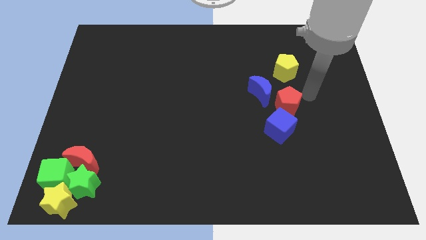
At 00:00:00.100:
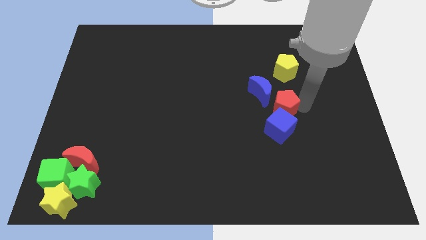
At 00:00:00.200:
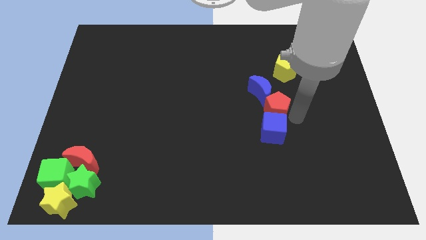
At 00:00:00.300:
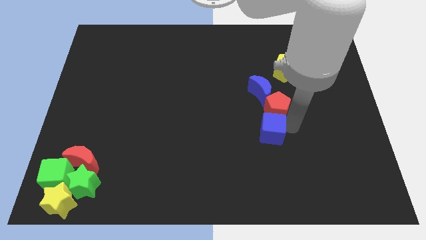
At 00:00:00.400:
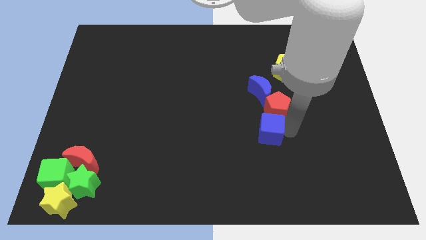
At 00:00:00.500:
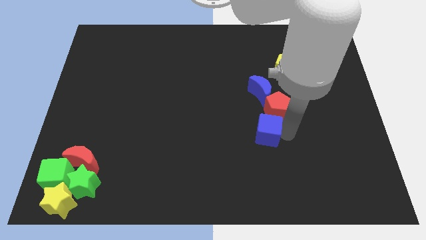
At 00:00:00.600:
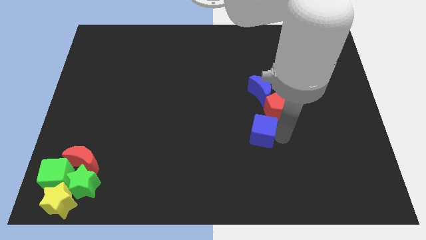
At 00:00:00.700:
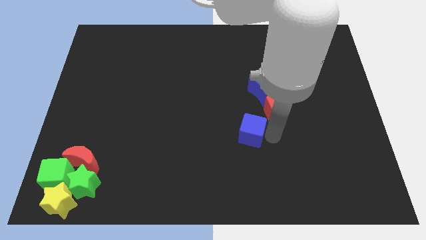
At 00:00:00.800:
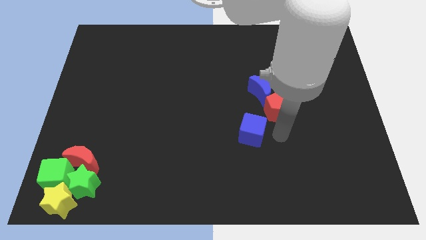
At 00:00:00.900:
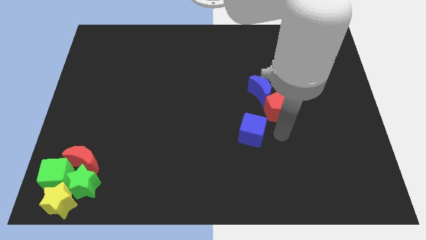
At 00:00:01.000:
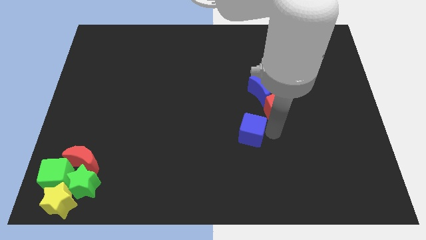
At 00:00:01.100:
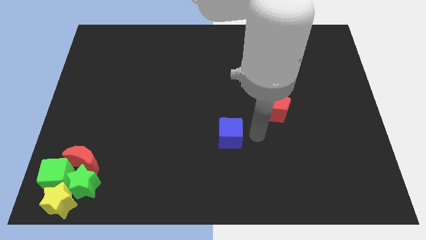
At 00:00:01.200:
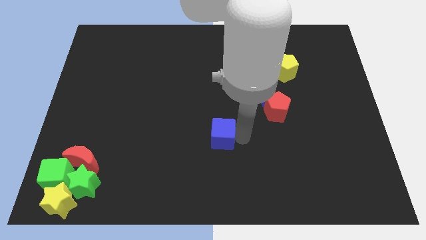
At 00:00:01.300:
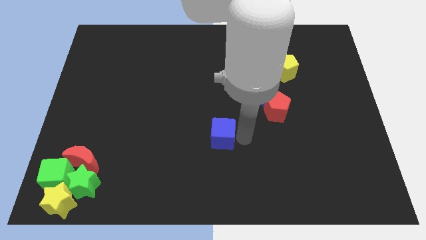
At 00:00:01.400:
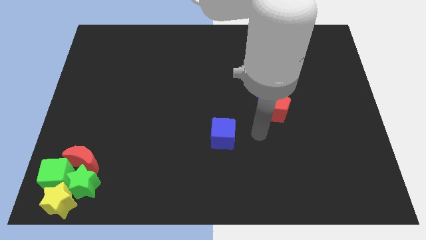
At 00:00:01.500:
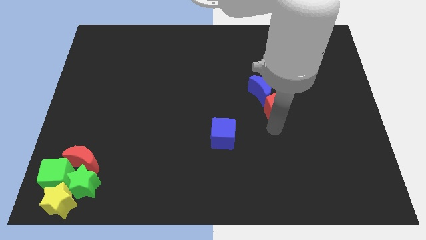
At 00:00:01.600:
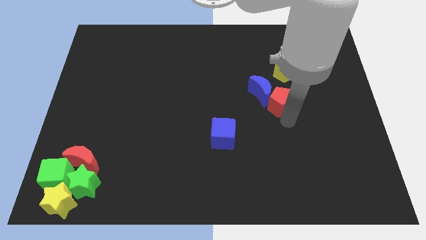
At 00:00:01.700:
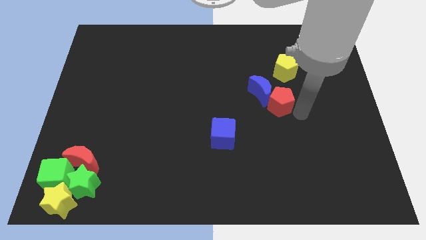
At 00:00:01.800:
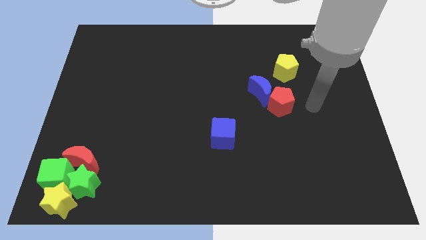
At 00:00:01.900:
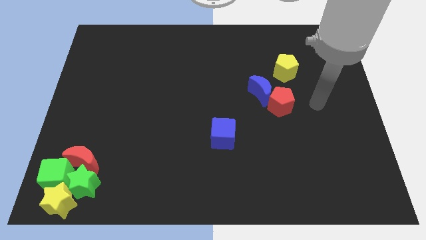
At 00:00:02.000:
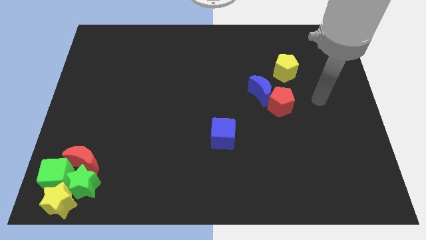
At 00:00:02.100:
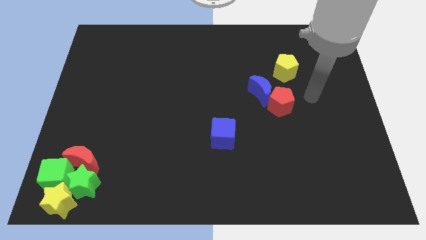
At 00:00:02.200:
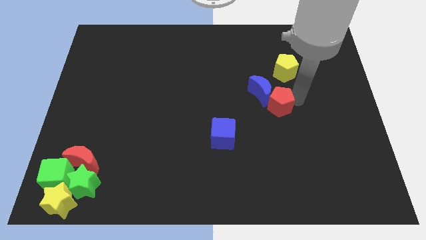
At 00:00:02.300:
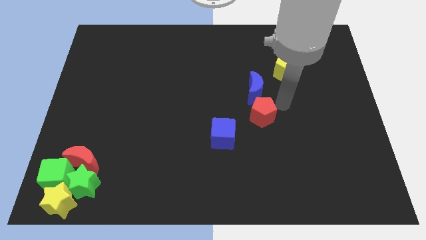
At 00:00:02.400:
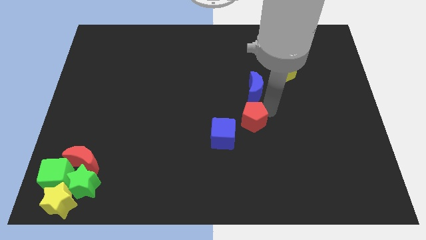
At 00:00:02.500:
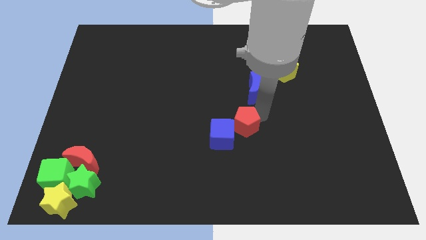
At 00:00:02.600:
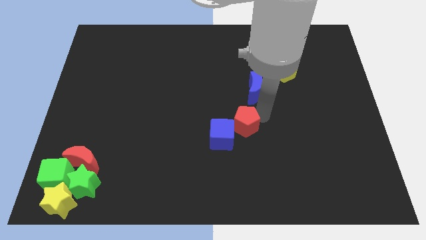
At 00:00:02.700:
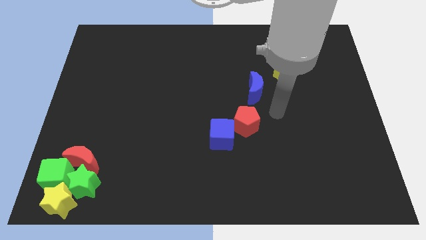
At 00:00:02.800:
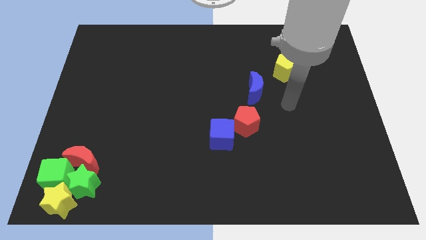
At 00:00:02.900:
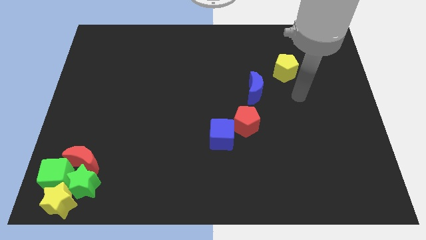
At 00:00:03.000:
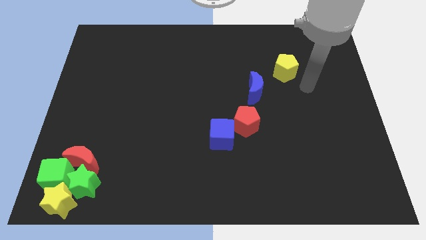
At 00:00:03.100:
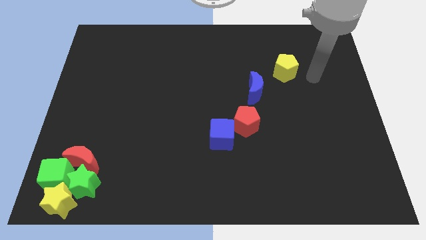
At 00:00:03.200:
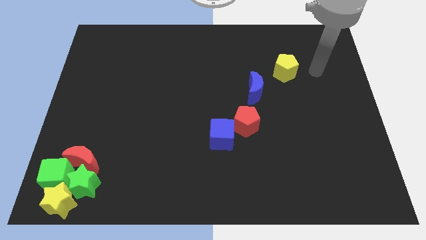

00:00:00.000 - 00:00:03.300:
move the blue cube and the red pentagon towards the center of the board

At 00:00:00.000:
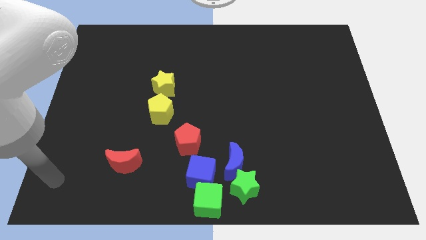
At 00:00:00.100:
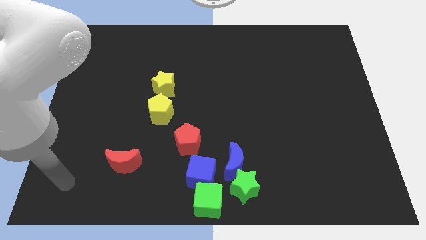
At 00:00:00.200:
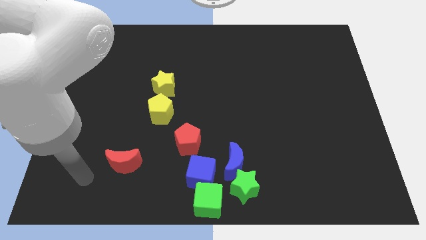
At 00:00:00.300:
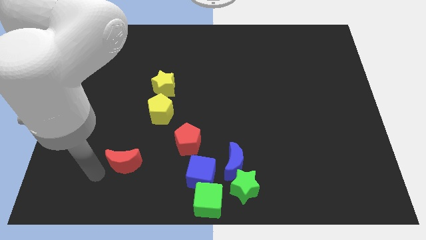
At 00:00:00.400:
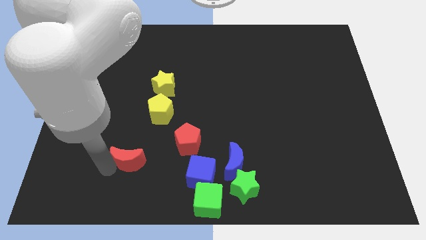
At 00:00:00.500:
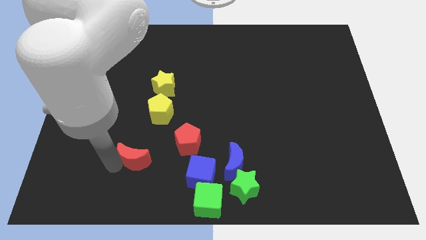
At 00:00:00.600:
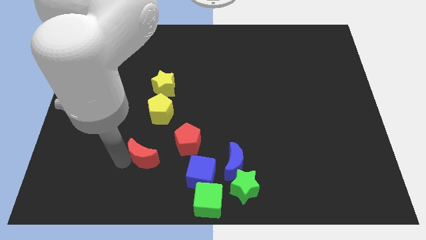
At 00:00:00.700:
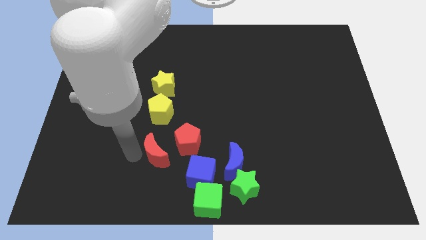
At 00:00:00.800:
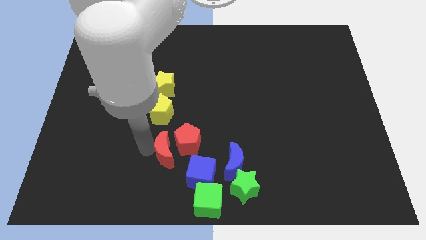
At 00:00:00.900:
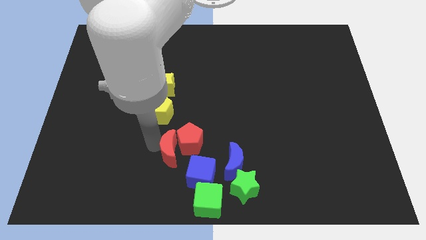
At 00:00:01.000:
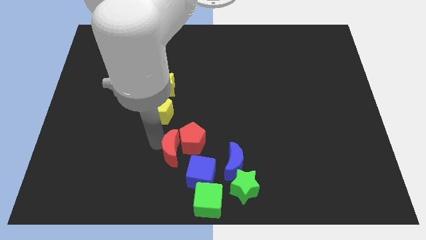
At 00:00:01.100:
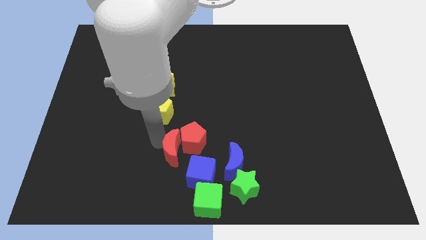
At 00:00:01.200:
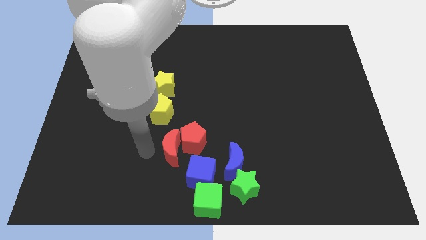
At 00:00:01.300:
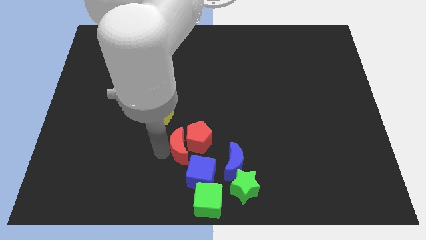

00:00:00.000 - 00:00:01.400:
push the red crescent into the red pentagon

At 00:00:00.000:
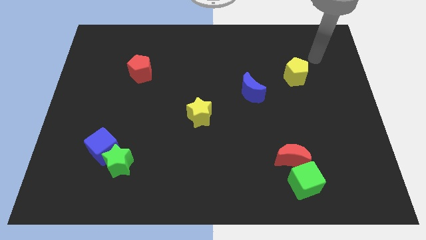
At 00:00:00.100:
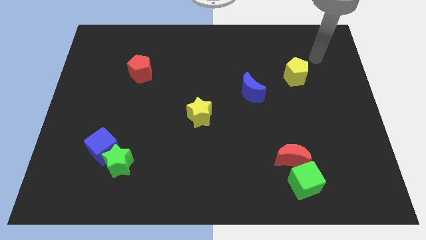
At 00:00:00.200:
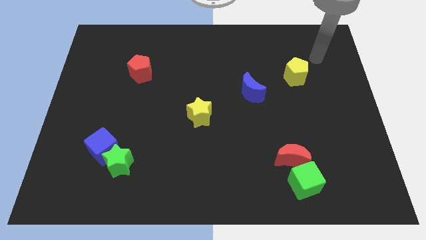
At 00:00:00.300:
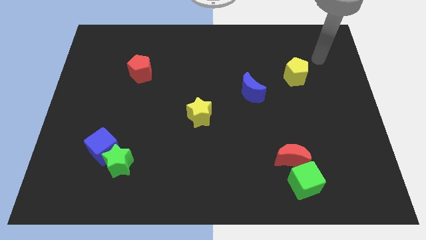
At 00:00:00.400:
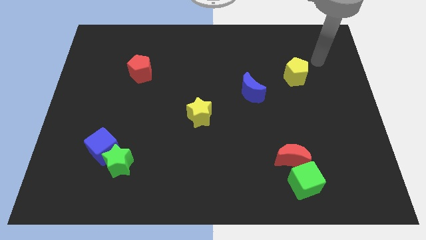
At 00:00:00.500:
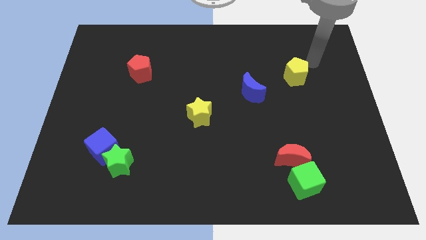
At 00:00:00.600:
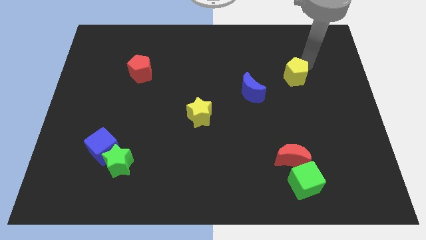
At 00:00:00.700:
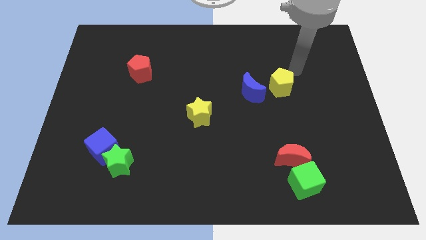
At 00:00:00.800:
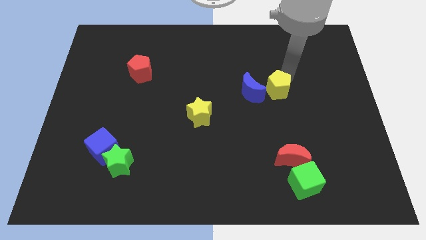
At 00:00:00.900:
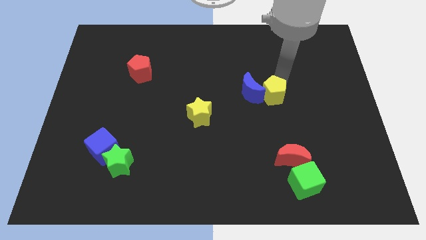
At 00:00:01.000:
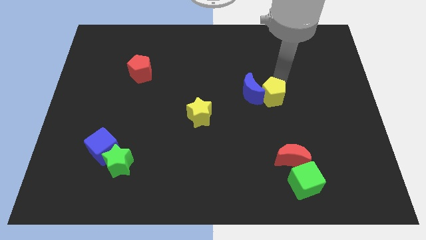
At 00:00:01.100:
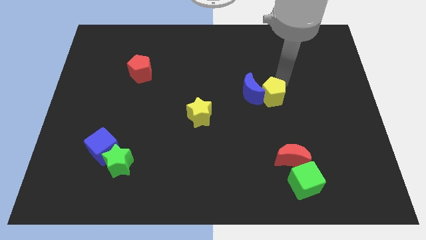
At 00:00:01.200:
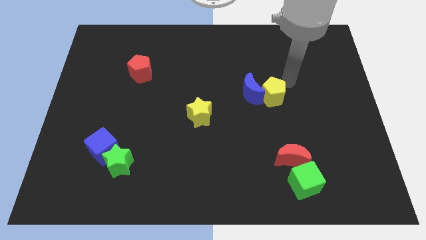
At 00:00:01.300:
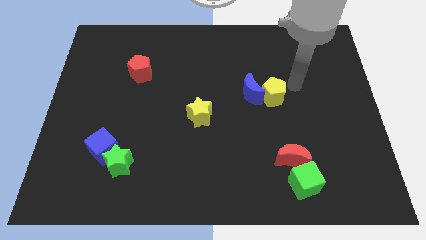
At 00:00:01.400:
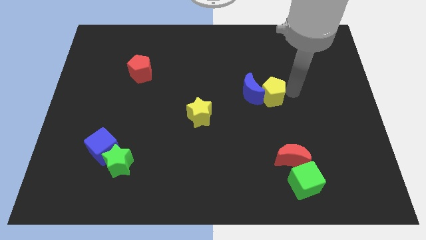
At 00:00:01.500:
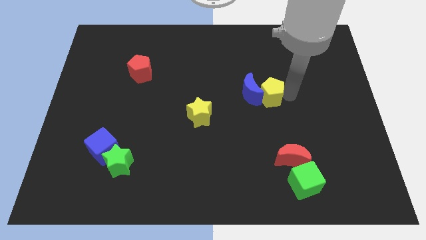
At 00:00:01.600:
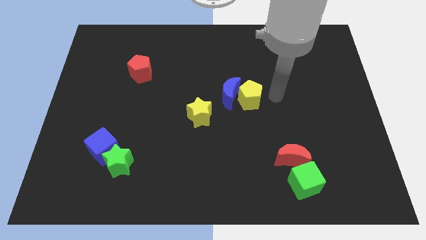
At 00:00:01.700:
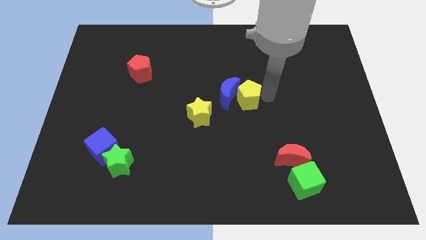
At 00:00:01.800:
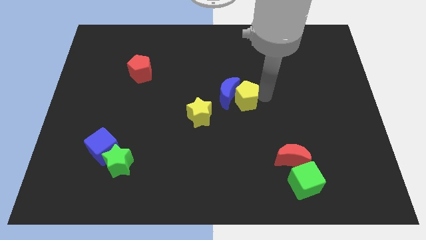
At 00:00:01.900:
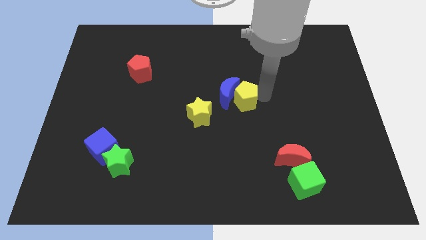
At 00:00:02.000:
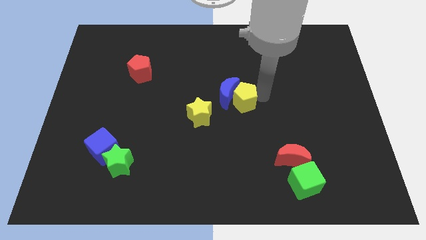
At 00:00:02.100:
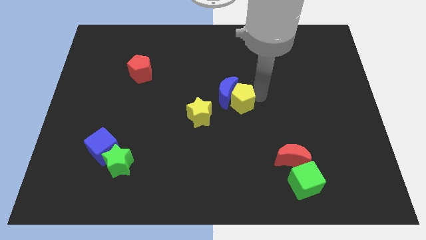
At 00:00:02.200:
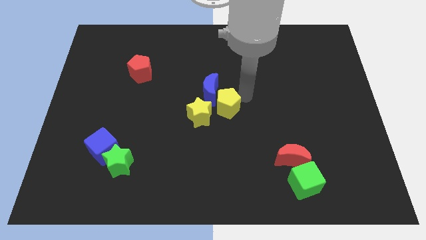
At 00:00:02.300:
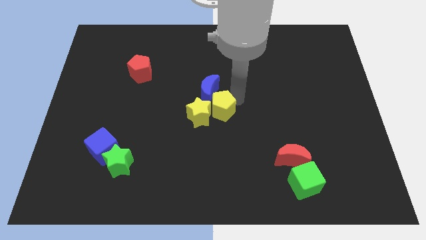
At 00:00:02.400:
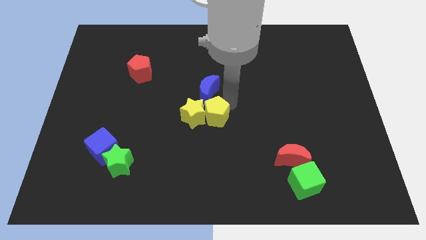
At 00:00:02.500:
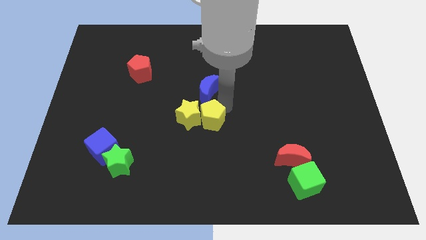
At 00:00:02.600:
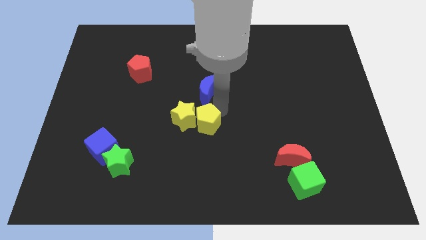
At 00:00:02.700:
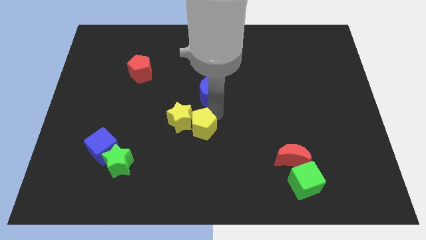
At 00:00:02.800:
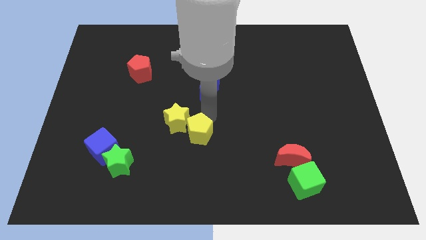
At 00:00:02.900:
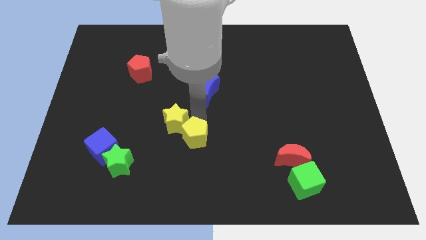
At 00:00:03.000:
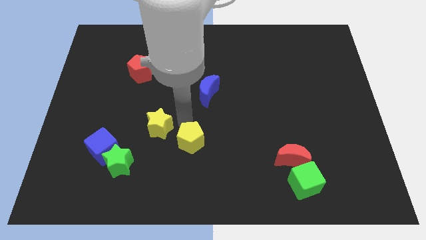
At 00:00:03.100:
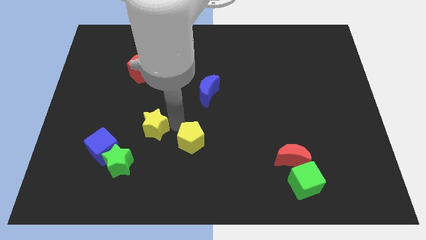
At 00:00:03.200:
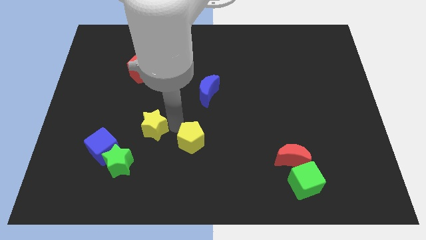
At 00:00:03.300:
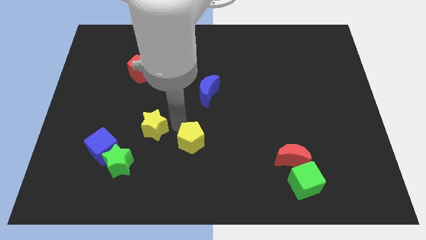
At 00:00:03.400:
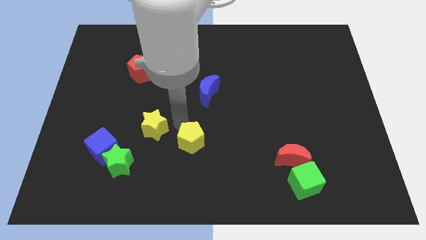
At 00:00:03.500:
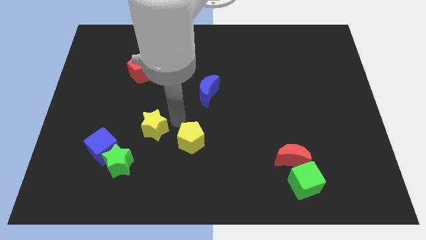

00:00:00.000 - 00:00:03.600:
push the yellow pentagon to the right of the yellow star

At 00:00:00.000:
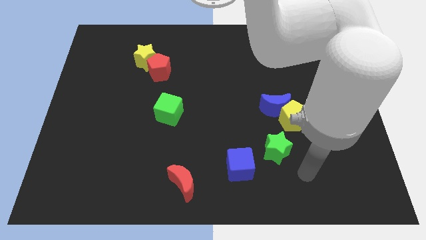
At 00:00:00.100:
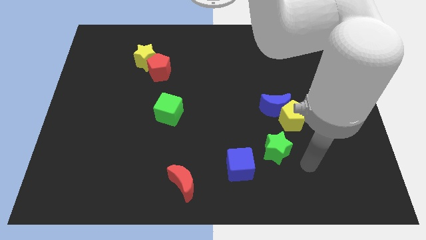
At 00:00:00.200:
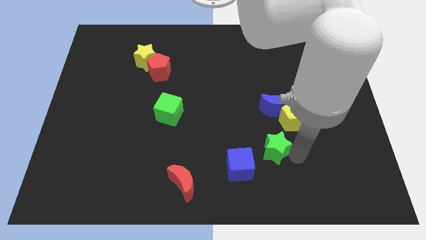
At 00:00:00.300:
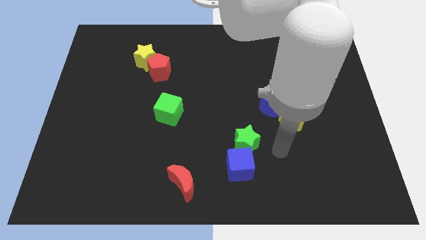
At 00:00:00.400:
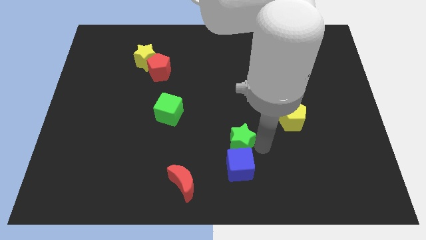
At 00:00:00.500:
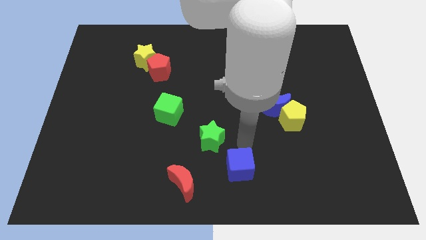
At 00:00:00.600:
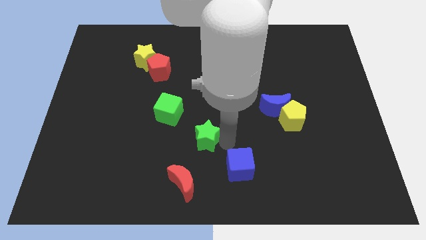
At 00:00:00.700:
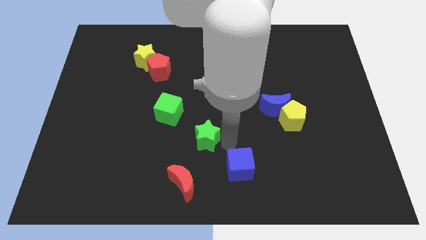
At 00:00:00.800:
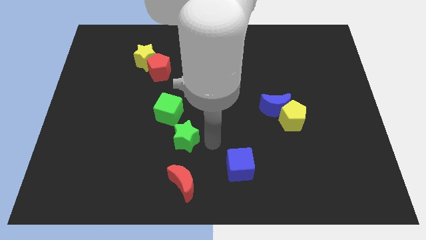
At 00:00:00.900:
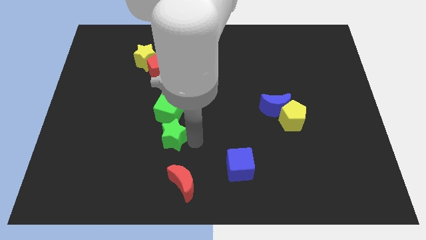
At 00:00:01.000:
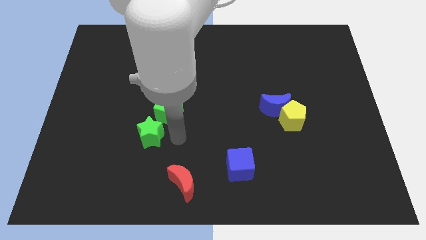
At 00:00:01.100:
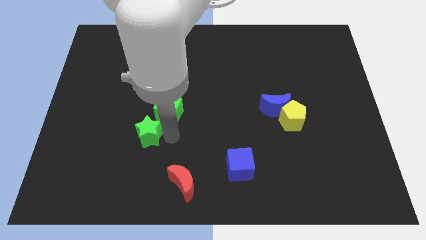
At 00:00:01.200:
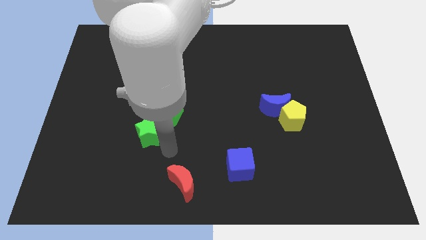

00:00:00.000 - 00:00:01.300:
push the green star diagonally top left to the blue cube
